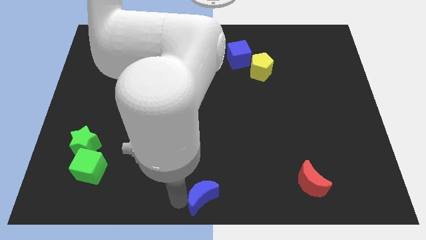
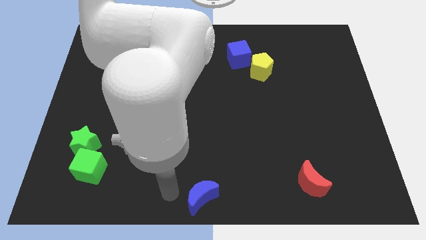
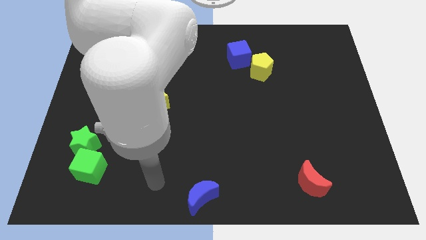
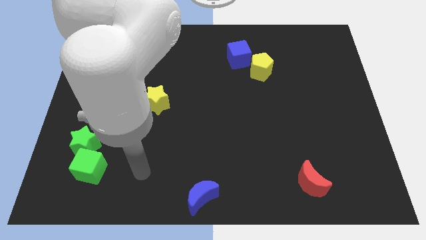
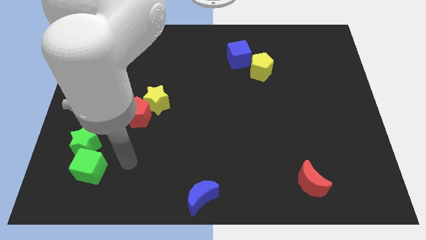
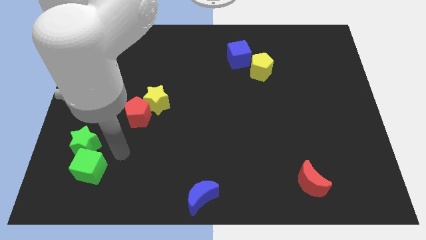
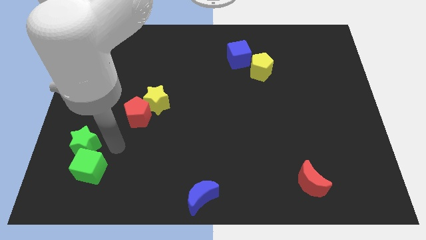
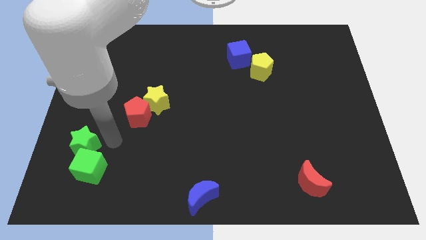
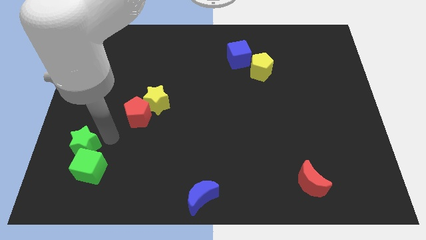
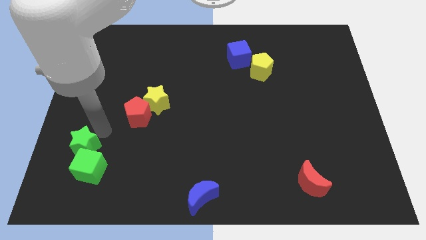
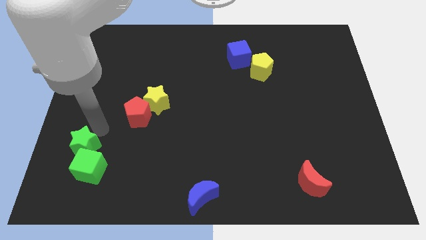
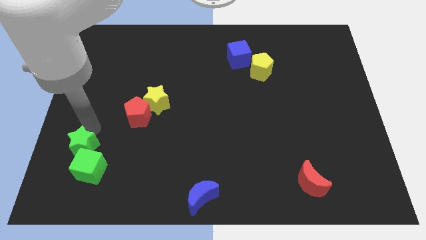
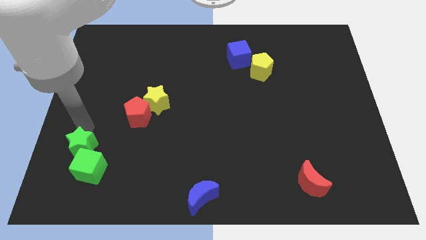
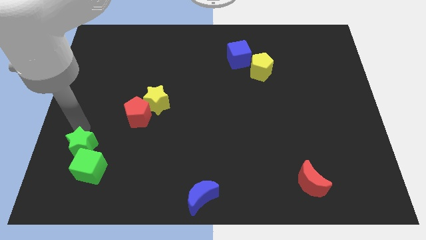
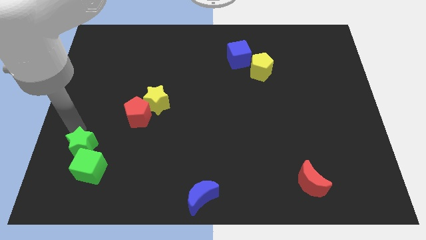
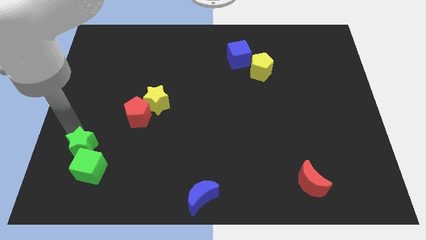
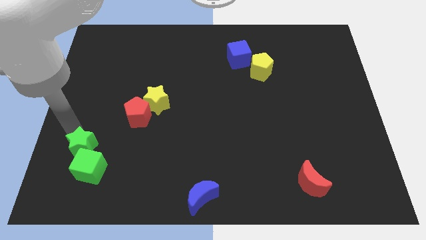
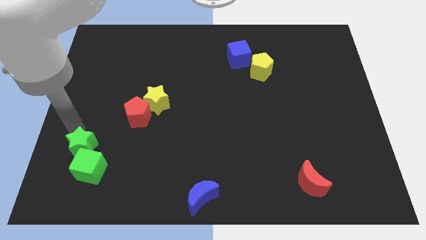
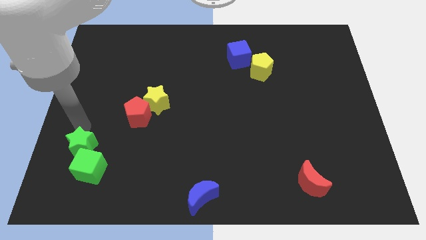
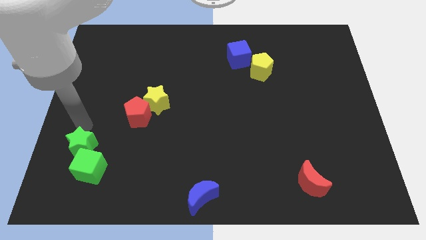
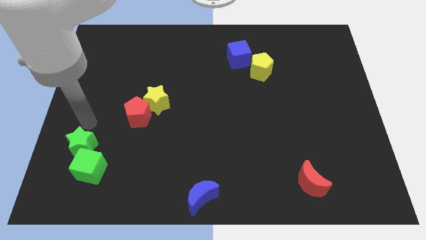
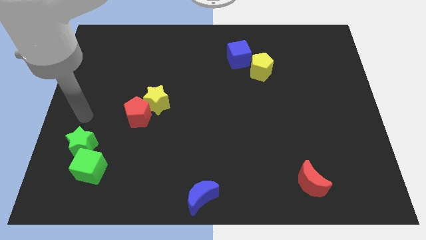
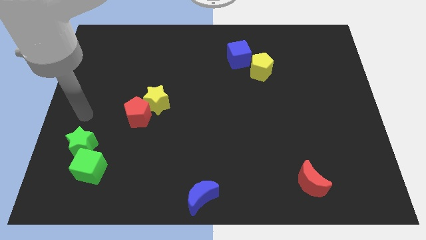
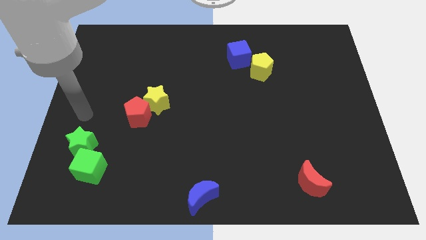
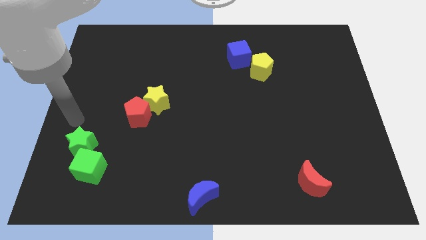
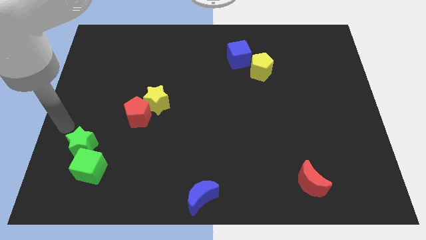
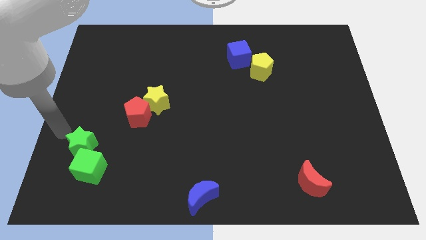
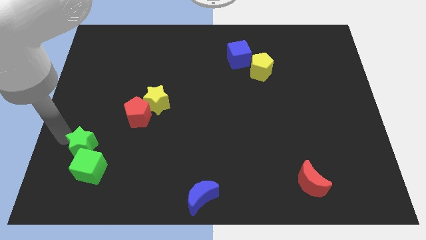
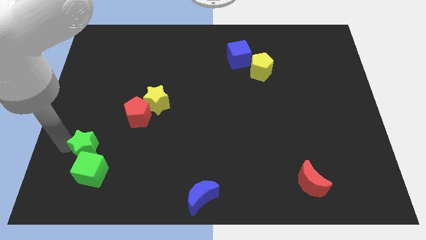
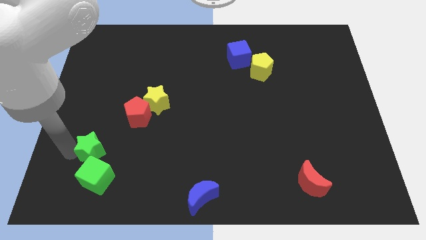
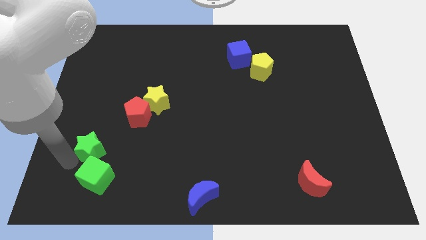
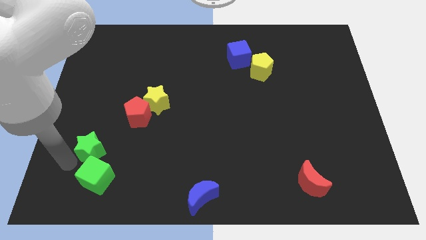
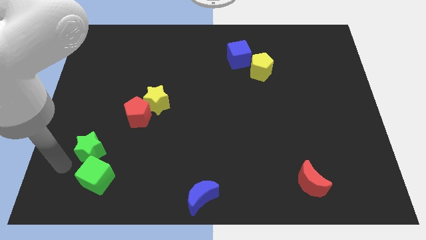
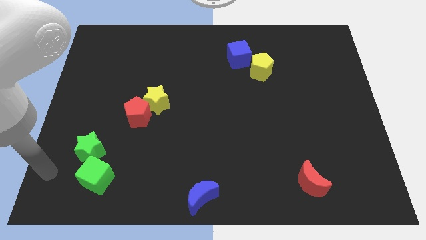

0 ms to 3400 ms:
move the arm away from the blue moon

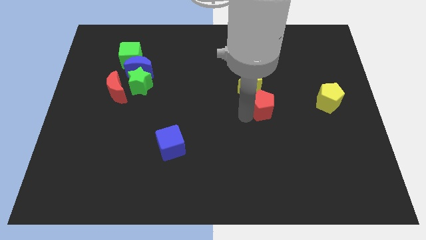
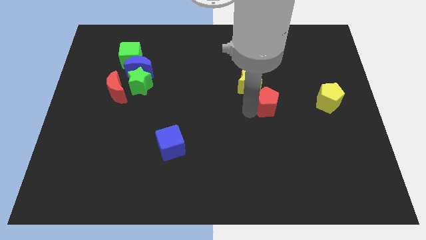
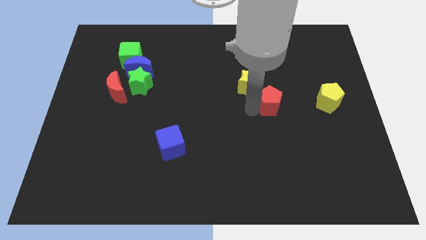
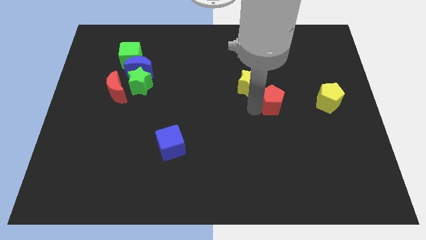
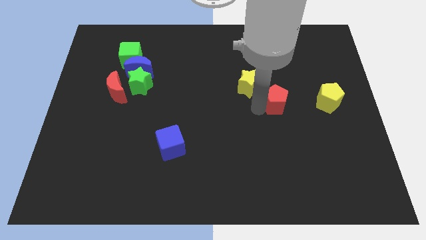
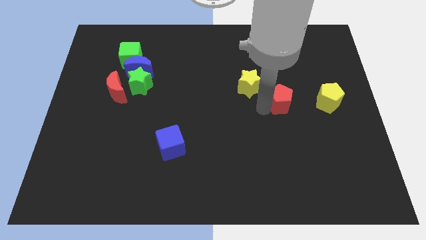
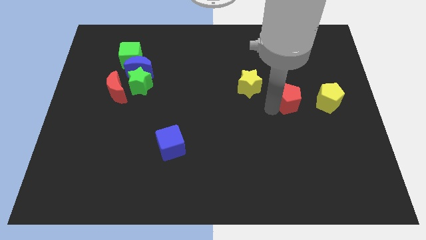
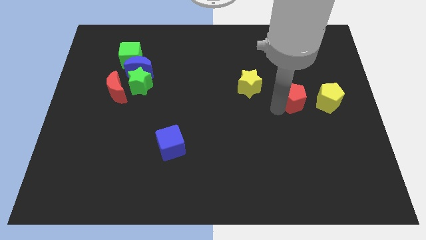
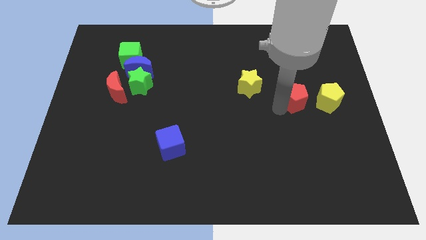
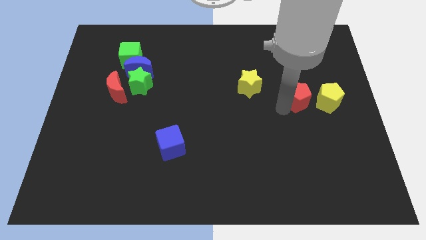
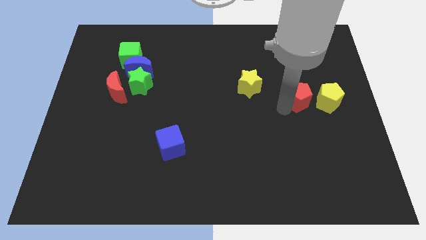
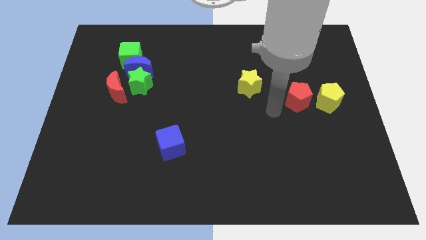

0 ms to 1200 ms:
place the red pentagon in between the yellow pentagon and yellow star

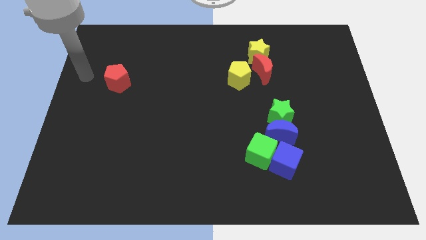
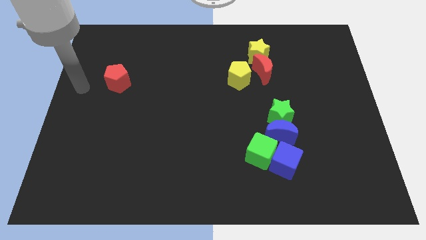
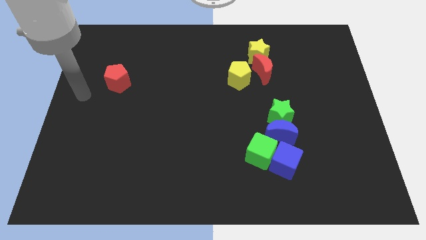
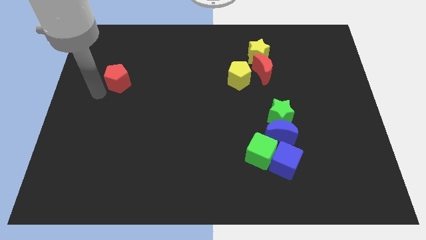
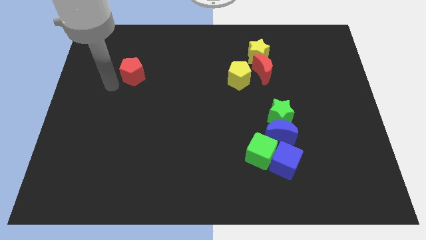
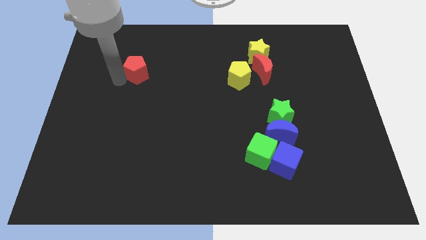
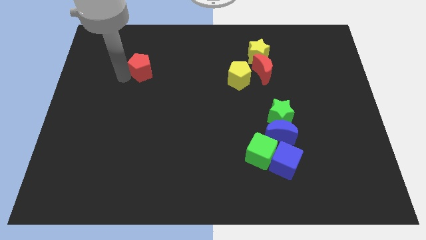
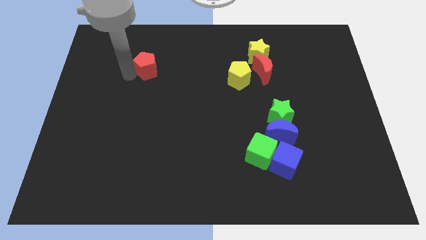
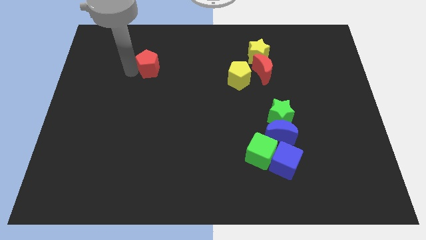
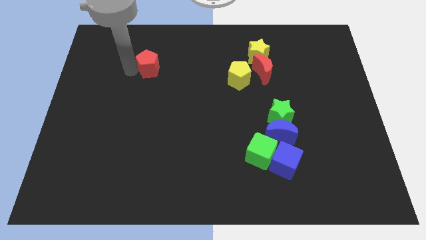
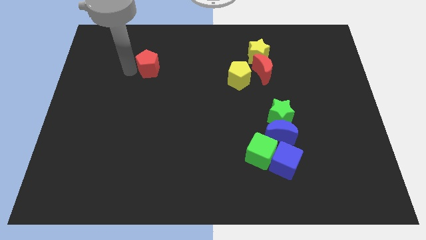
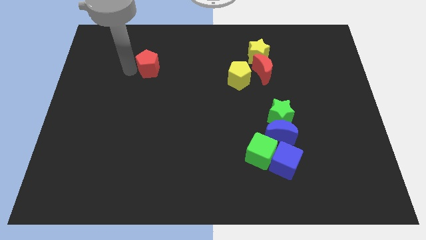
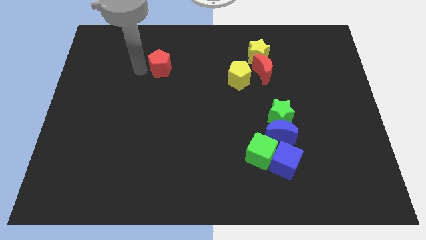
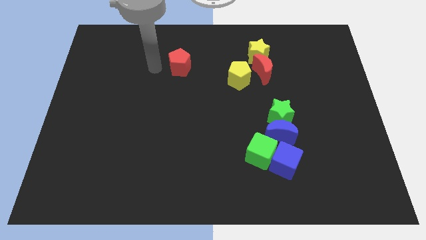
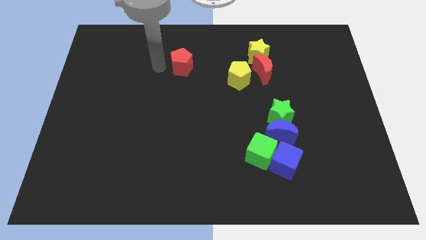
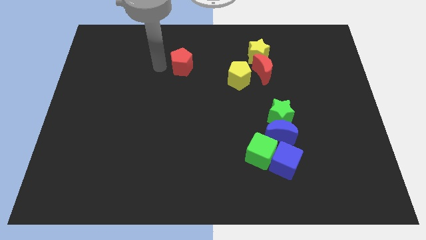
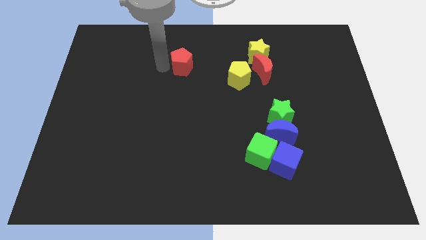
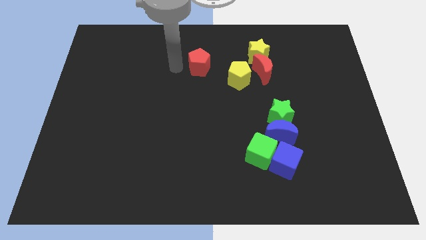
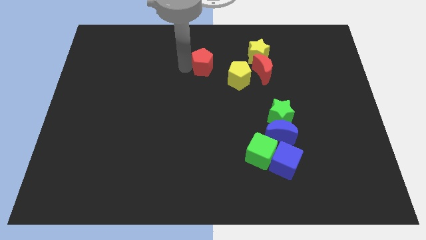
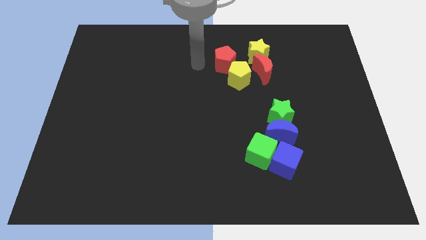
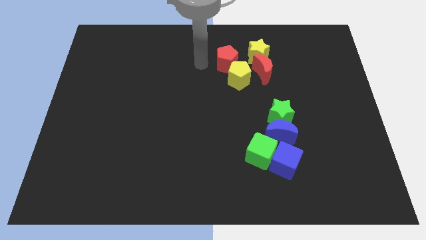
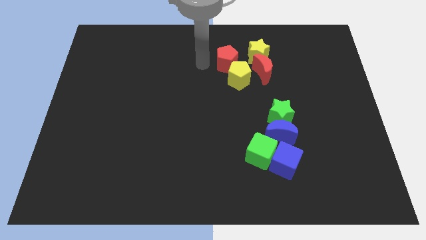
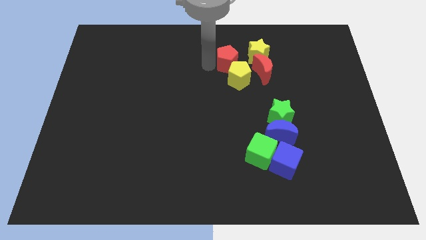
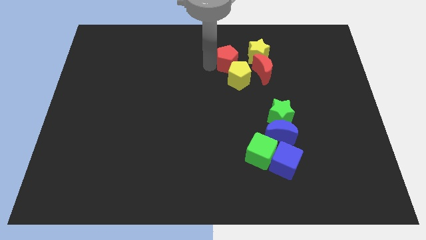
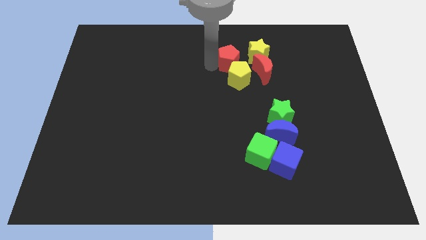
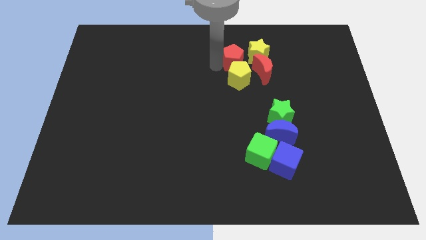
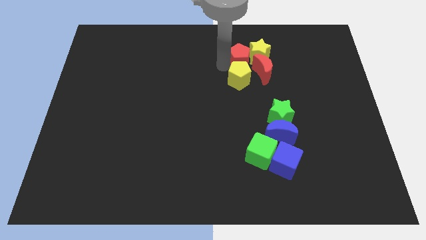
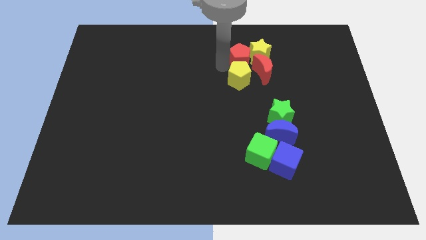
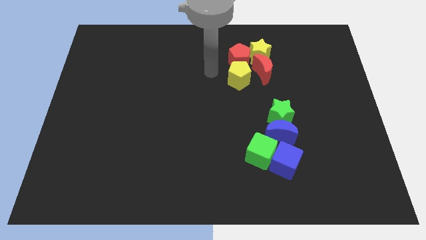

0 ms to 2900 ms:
push the red pentagon into the yellow star

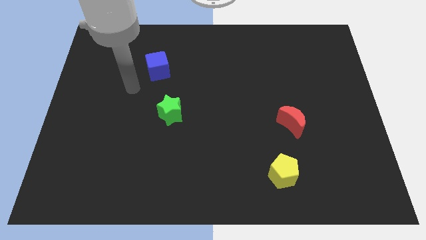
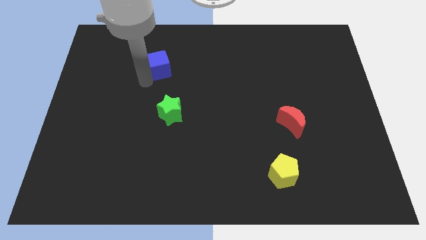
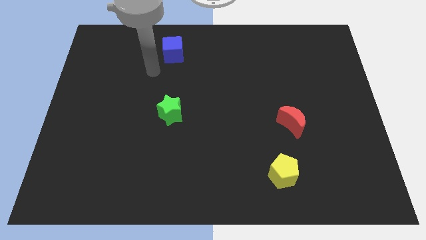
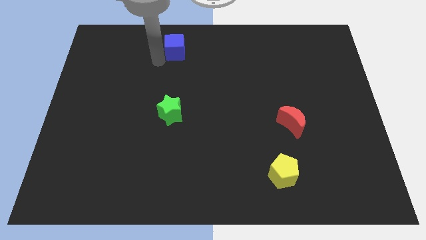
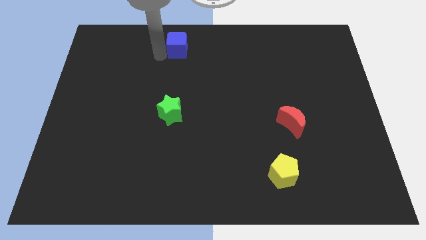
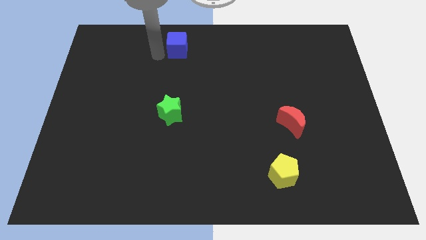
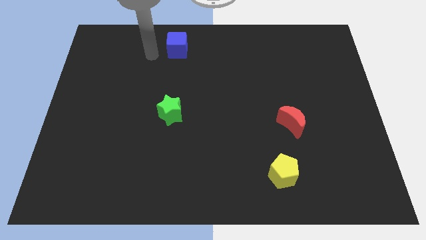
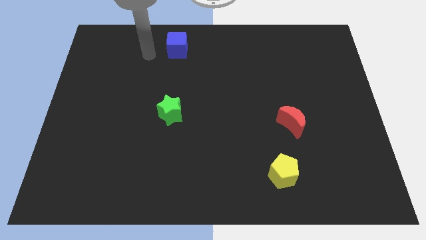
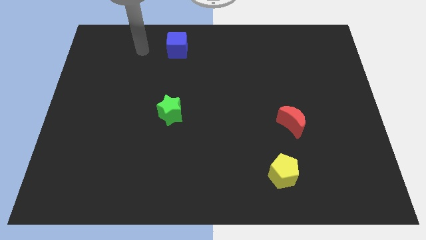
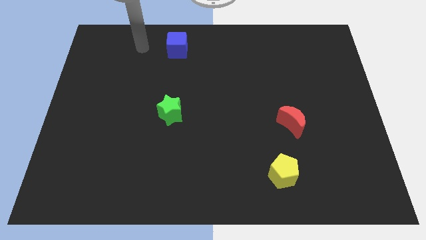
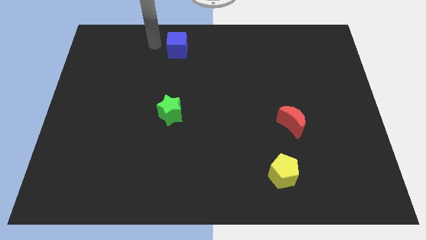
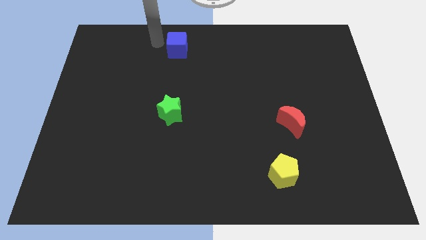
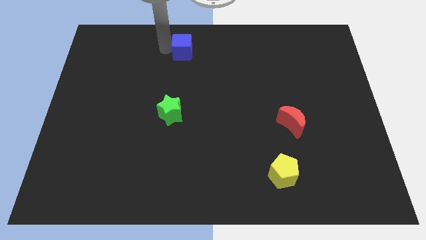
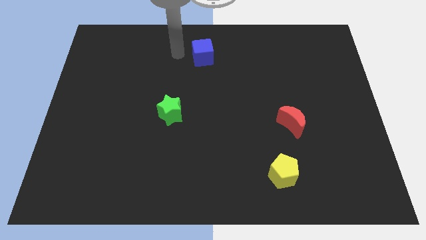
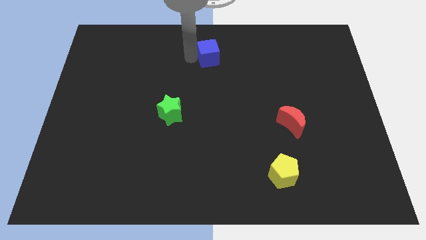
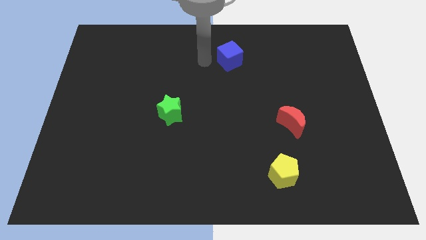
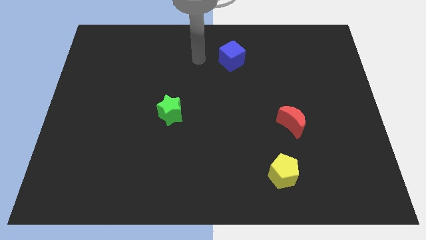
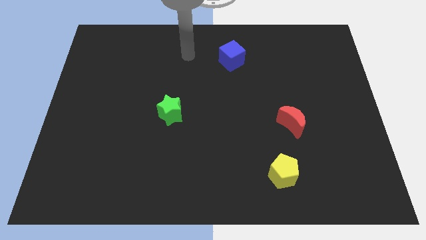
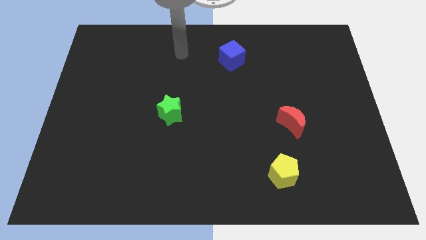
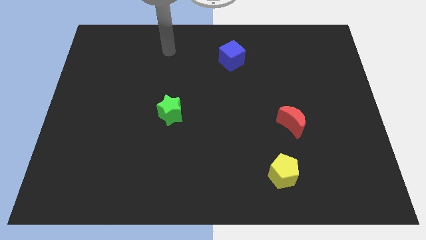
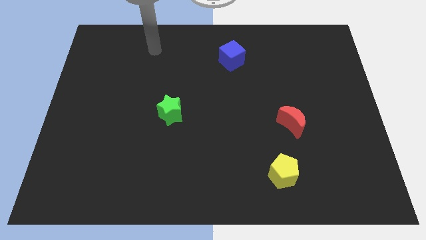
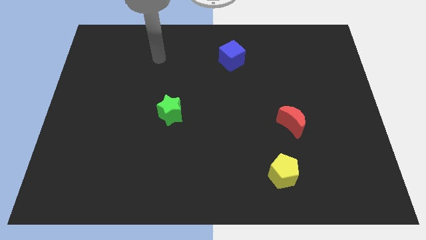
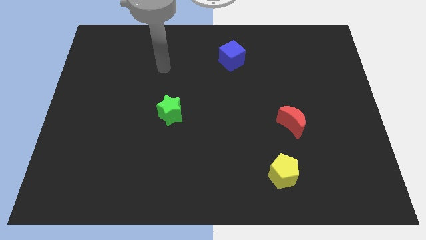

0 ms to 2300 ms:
place the blue block diagonal to the star
